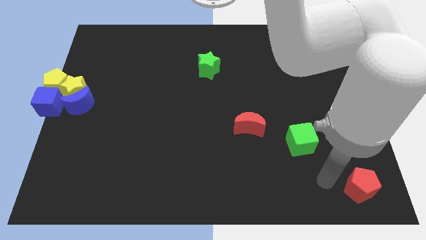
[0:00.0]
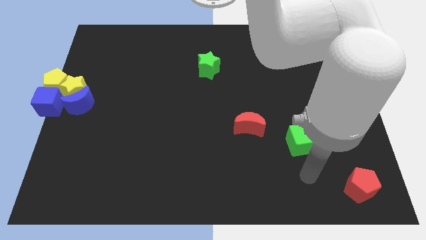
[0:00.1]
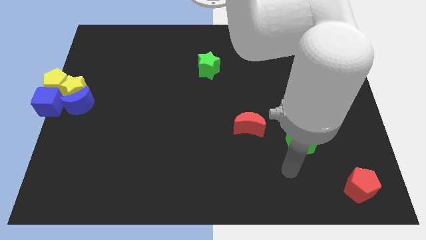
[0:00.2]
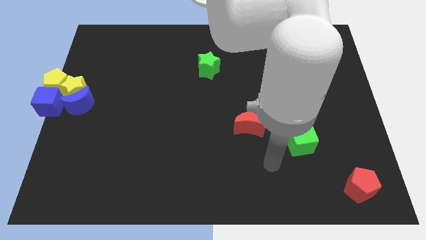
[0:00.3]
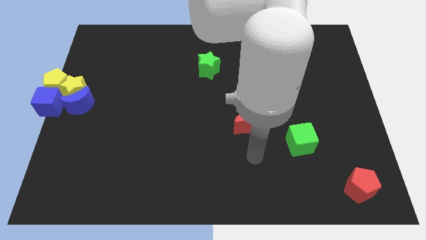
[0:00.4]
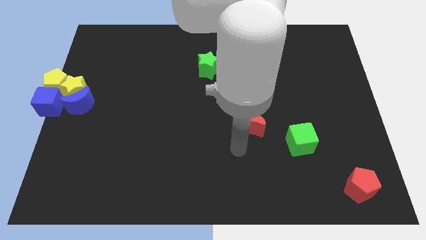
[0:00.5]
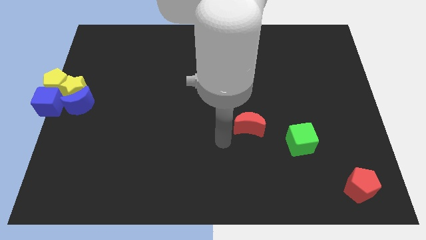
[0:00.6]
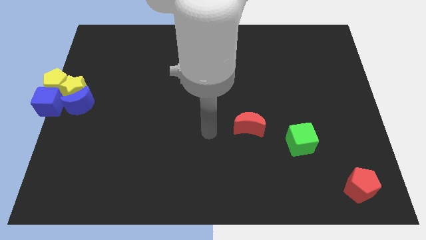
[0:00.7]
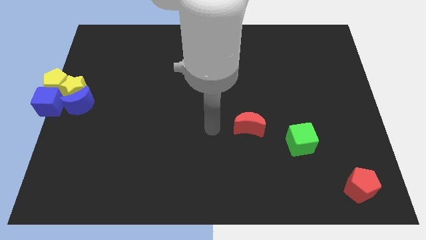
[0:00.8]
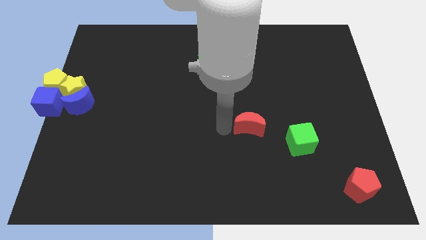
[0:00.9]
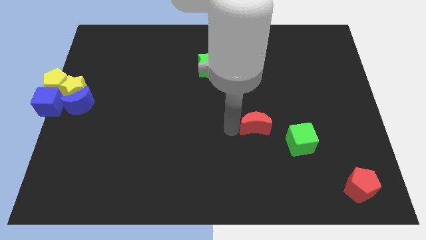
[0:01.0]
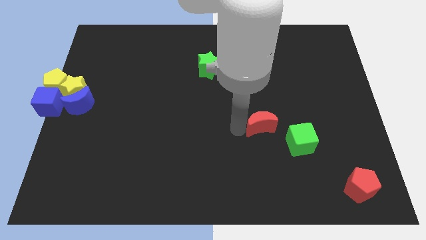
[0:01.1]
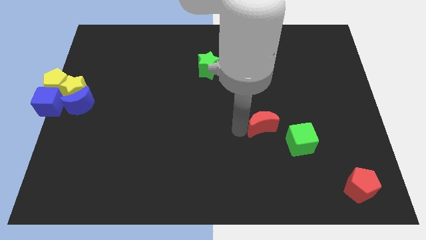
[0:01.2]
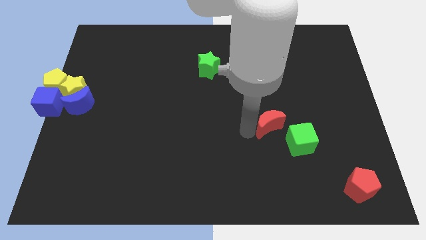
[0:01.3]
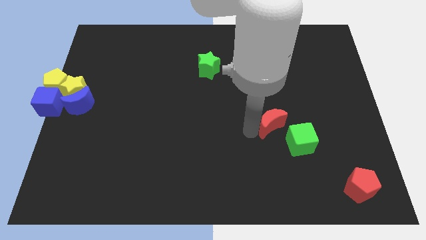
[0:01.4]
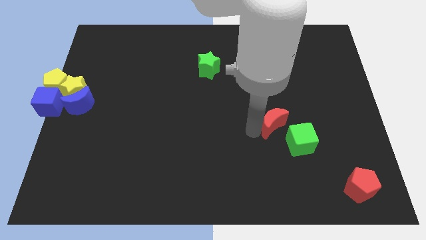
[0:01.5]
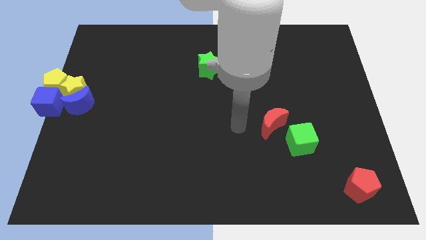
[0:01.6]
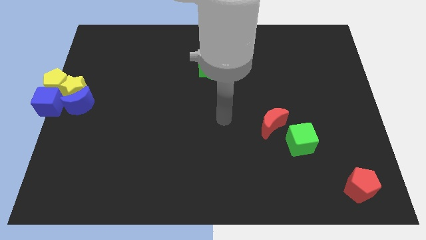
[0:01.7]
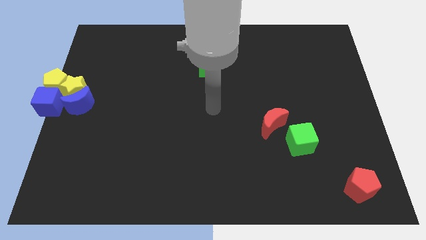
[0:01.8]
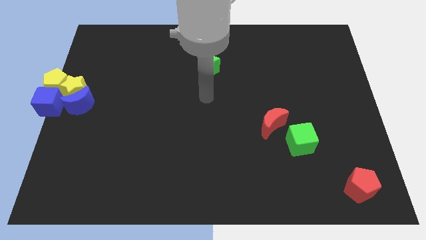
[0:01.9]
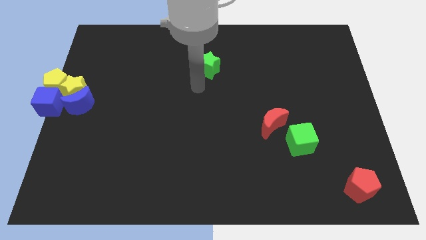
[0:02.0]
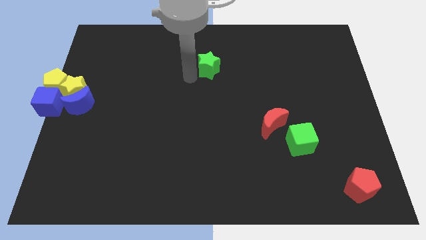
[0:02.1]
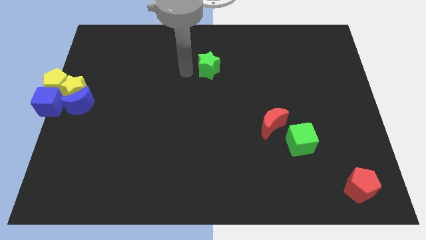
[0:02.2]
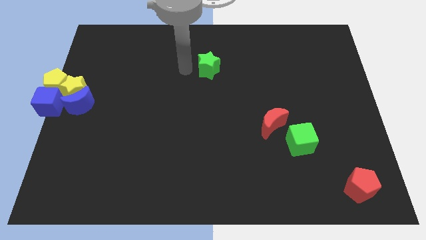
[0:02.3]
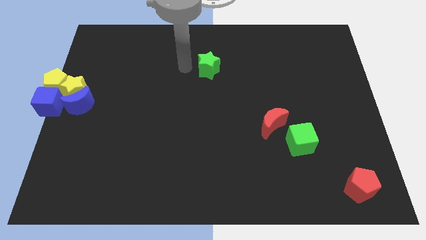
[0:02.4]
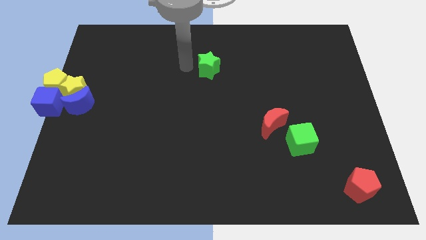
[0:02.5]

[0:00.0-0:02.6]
move the red moon top left diagonal to the green cube

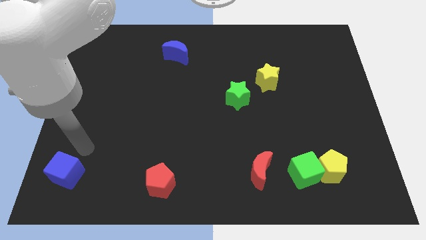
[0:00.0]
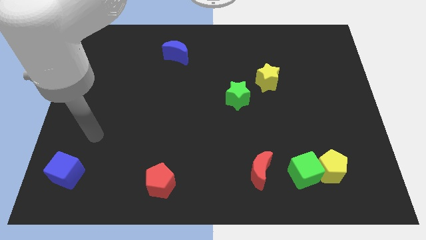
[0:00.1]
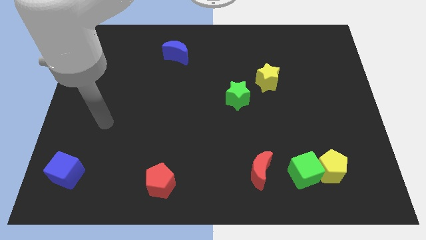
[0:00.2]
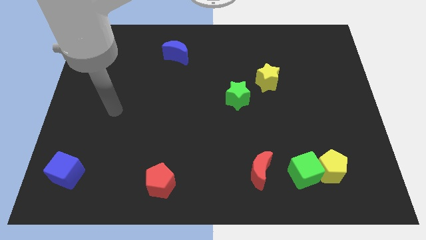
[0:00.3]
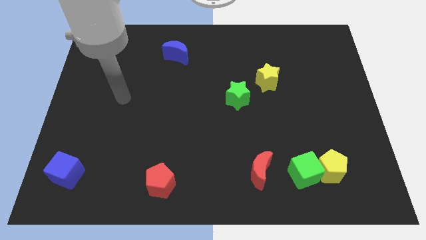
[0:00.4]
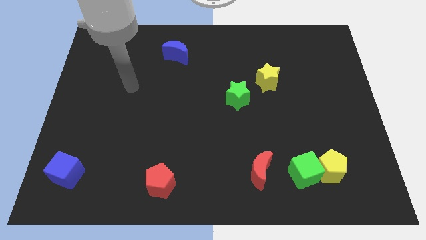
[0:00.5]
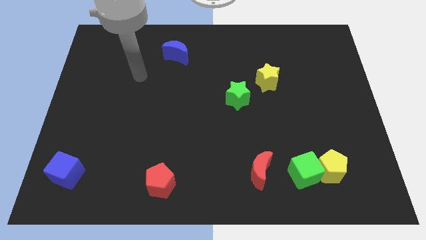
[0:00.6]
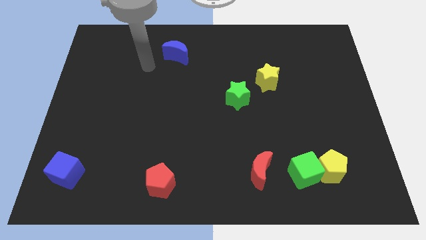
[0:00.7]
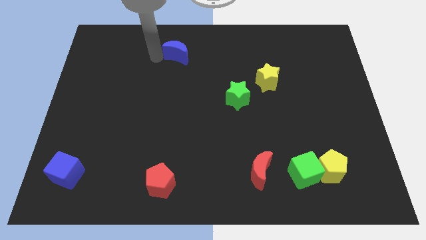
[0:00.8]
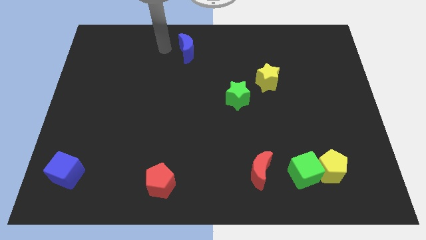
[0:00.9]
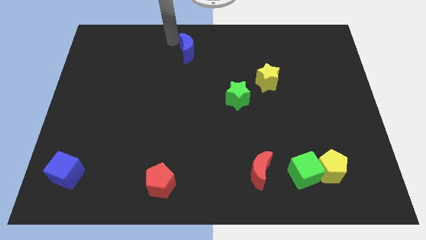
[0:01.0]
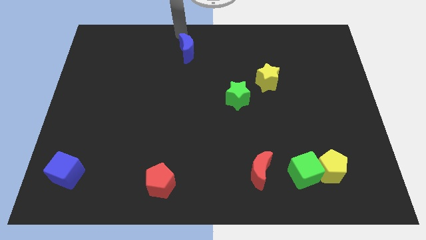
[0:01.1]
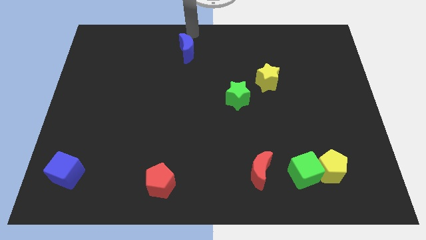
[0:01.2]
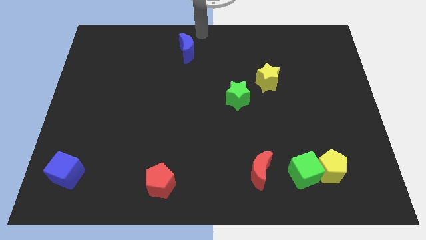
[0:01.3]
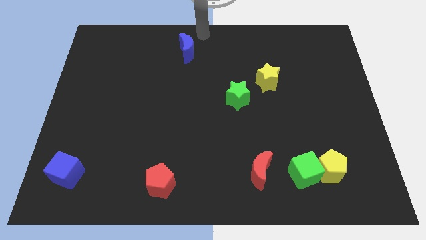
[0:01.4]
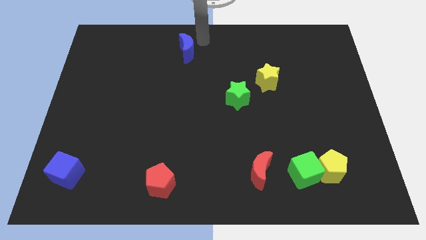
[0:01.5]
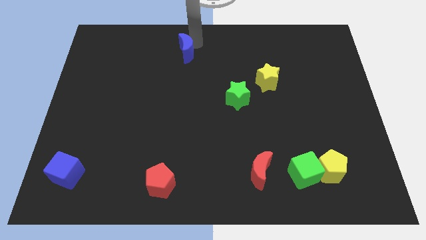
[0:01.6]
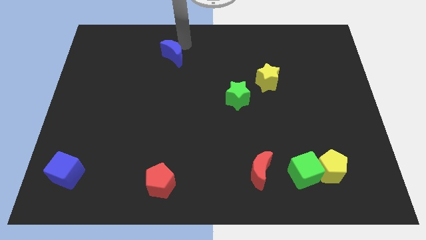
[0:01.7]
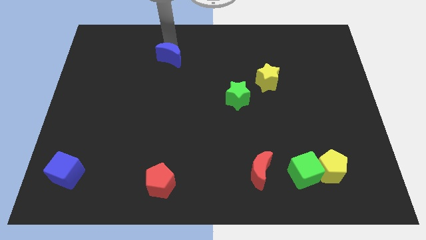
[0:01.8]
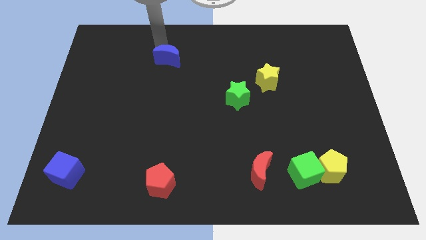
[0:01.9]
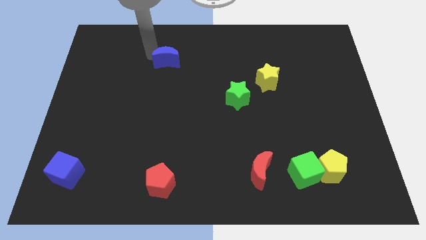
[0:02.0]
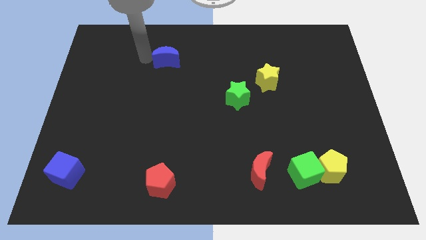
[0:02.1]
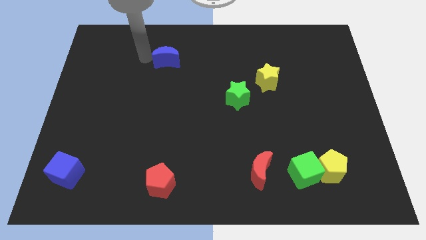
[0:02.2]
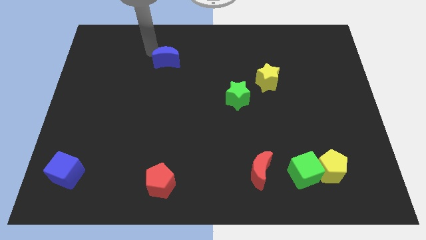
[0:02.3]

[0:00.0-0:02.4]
slightly move down the blue moon

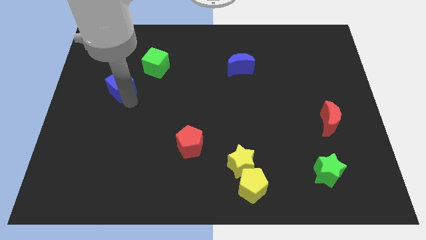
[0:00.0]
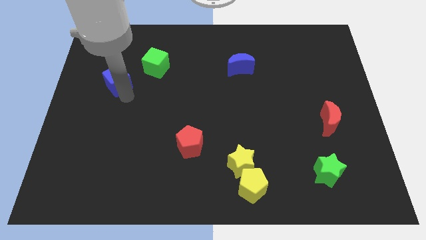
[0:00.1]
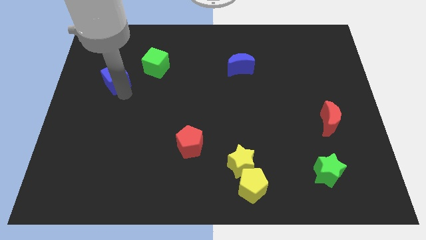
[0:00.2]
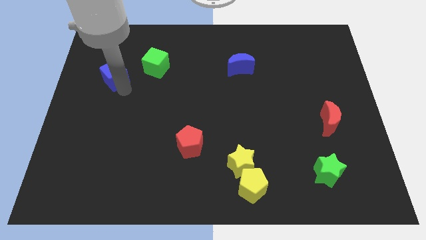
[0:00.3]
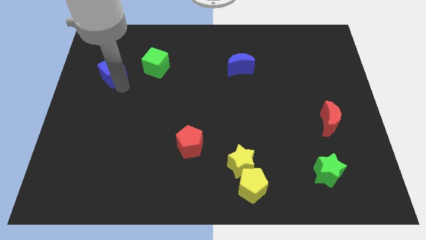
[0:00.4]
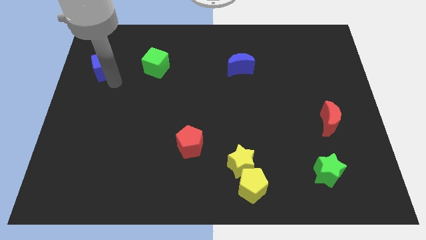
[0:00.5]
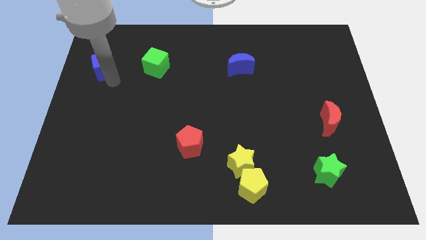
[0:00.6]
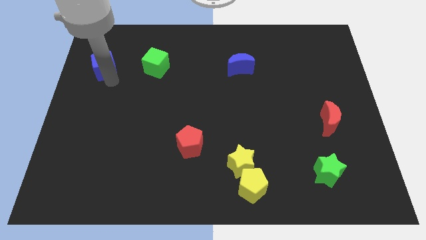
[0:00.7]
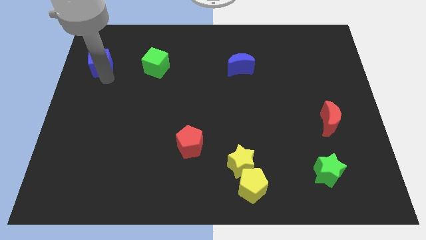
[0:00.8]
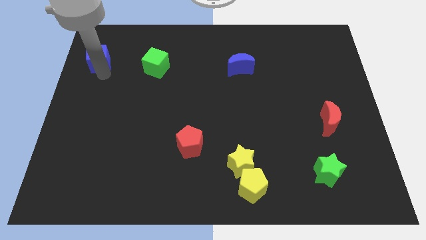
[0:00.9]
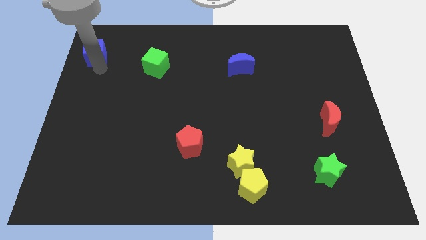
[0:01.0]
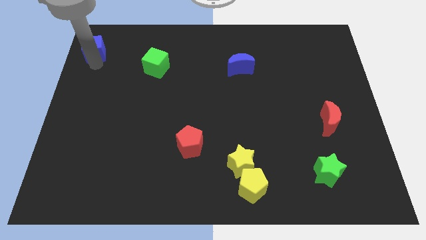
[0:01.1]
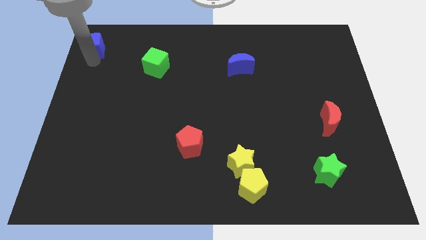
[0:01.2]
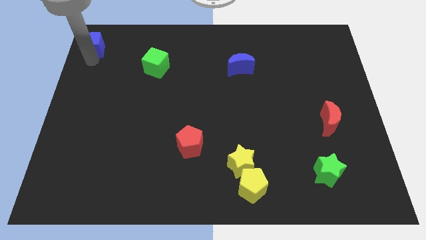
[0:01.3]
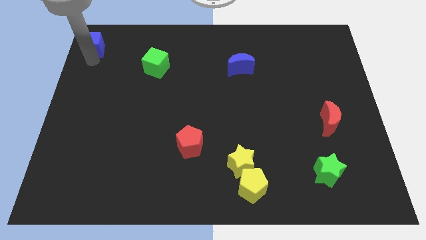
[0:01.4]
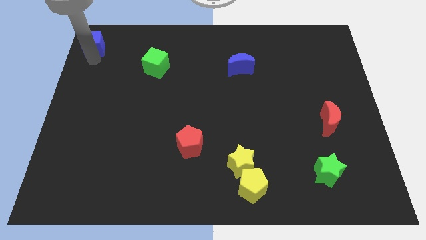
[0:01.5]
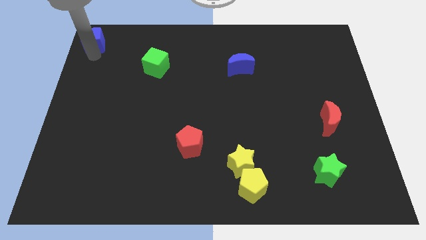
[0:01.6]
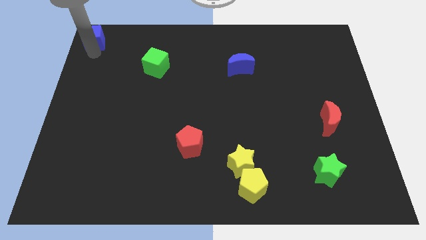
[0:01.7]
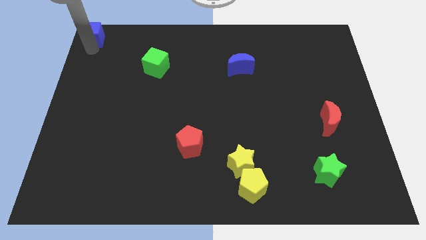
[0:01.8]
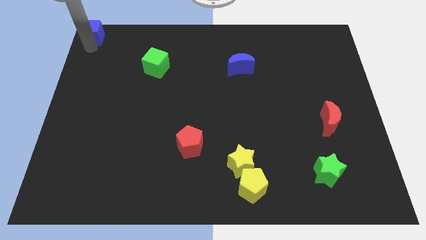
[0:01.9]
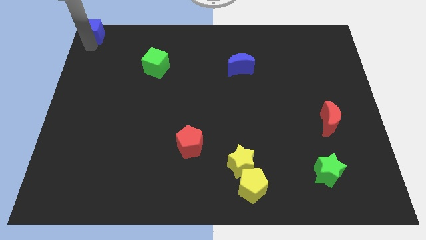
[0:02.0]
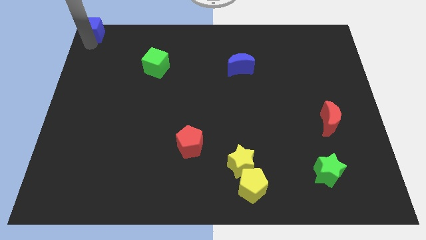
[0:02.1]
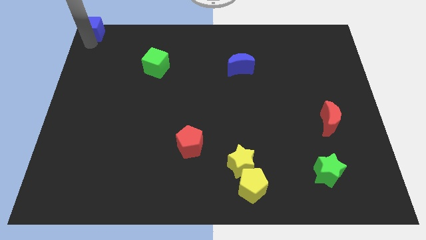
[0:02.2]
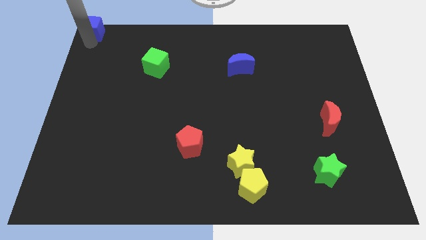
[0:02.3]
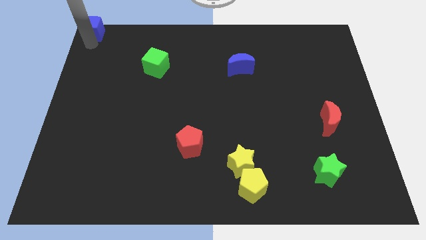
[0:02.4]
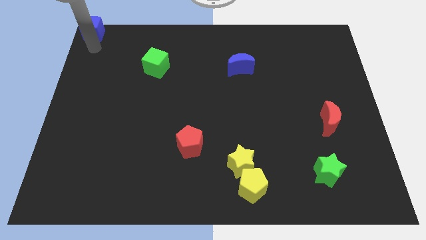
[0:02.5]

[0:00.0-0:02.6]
push the blue cube to the top left corner of the board

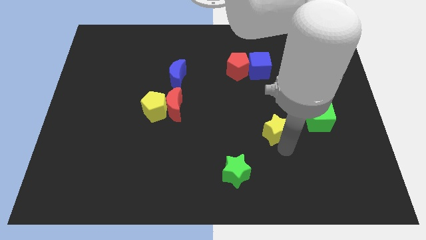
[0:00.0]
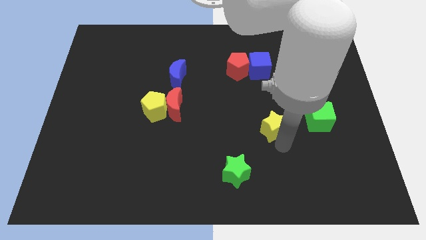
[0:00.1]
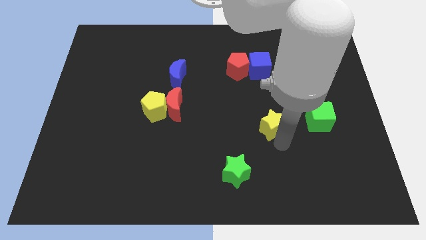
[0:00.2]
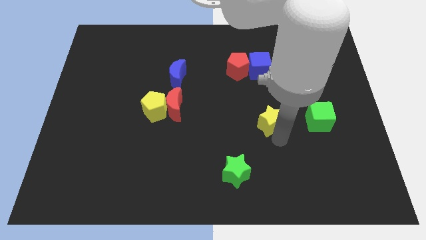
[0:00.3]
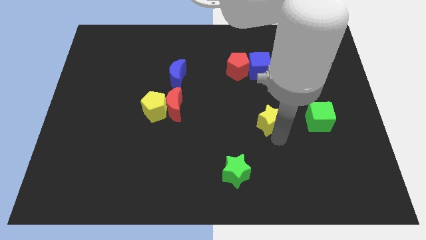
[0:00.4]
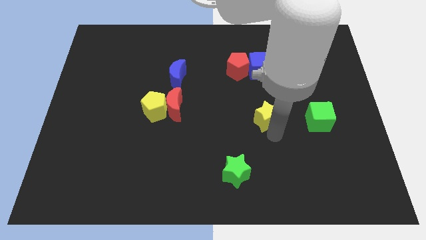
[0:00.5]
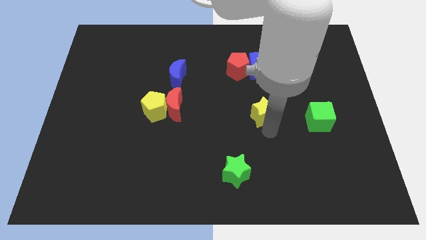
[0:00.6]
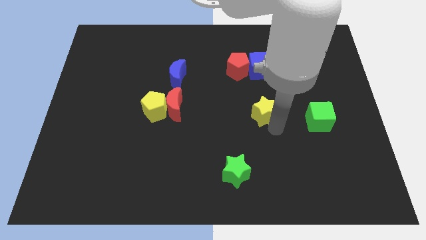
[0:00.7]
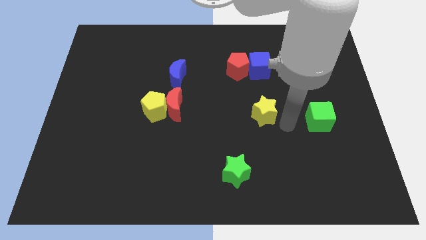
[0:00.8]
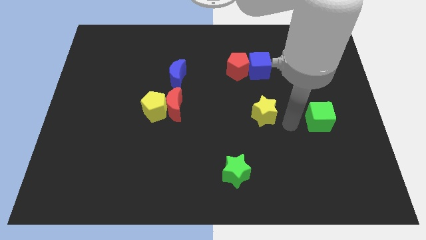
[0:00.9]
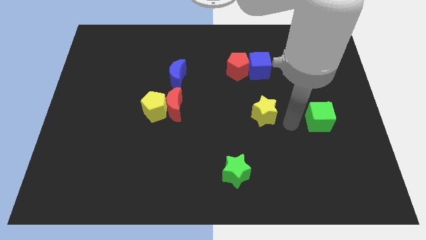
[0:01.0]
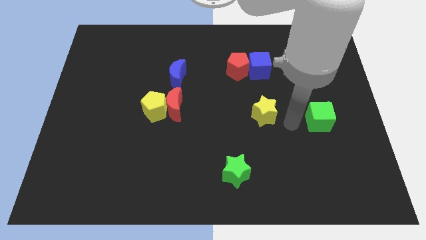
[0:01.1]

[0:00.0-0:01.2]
put yellow star below blue cube

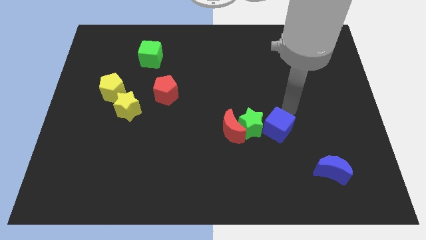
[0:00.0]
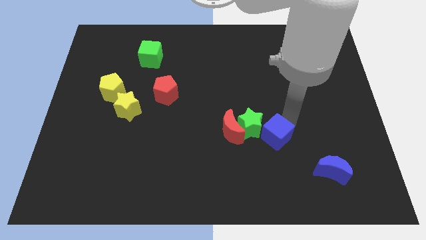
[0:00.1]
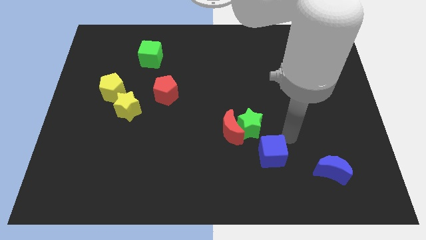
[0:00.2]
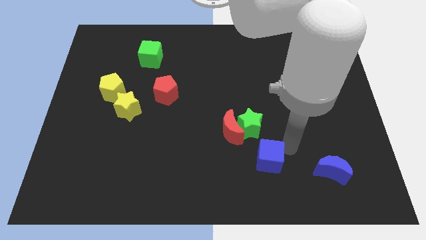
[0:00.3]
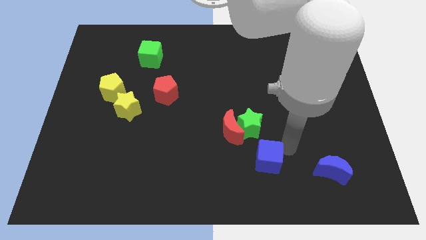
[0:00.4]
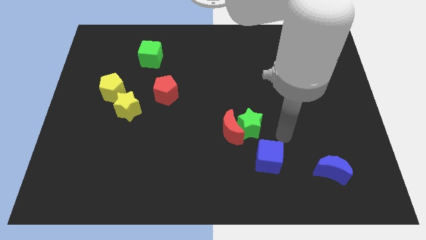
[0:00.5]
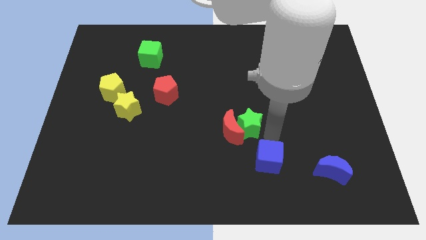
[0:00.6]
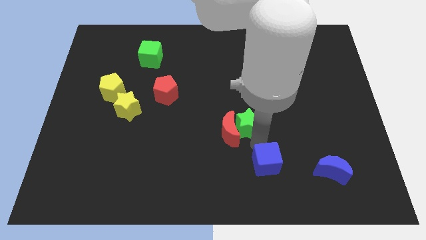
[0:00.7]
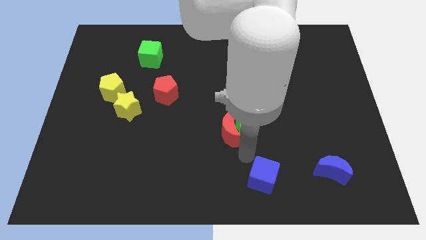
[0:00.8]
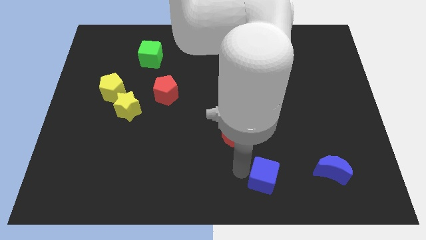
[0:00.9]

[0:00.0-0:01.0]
move blue cube downwards
